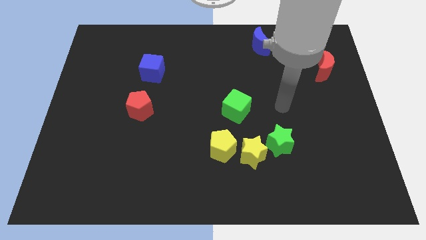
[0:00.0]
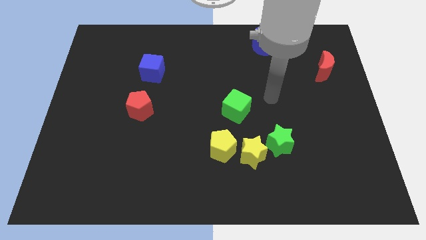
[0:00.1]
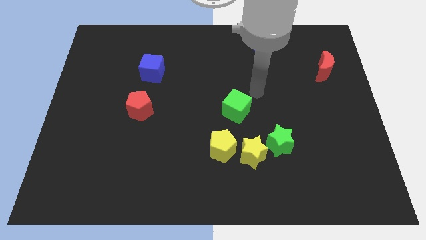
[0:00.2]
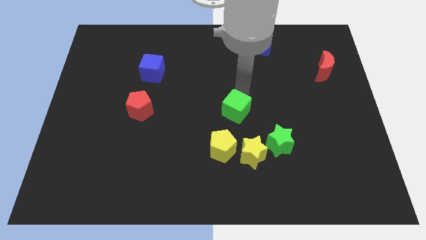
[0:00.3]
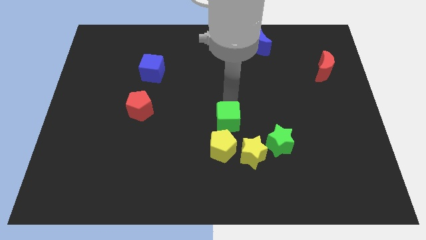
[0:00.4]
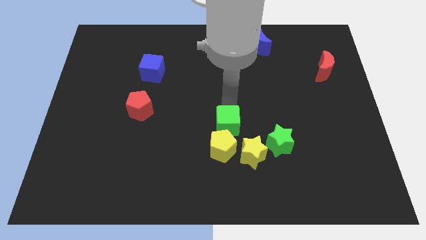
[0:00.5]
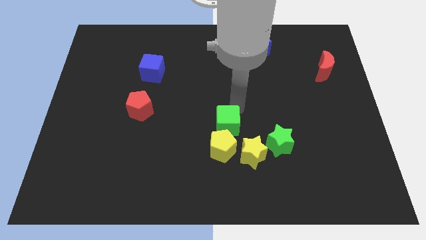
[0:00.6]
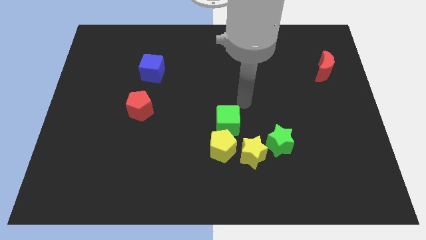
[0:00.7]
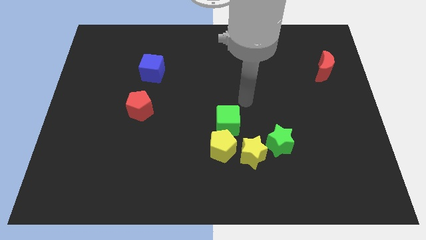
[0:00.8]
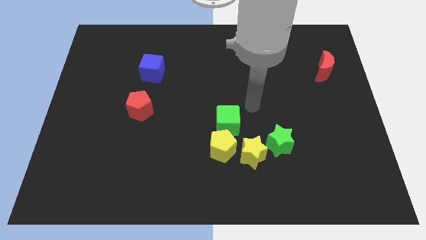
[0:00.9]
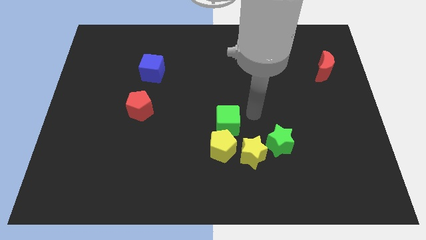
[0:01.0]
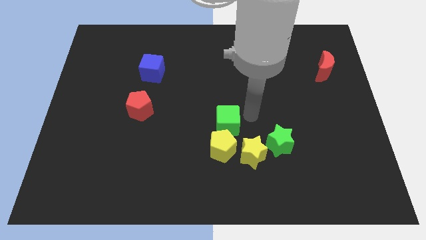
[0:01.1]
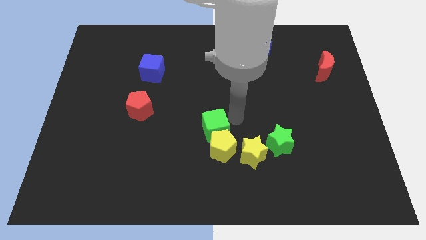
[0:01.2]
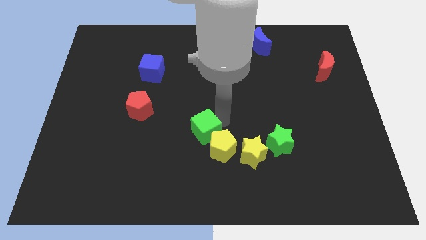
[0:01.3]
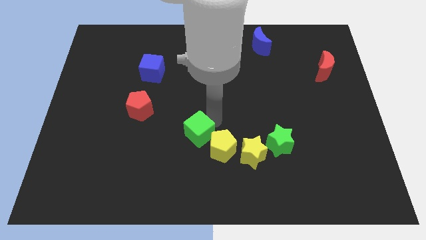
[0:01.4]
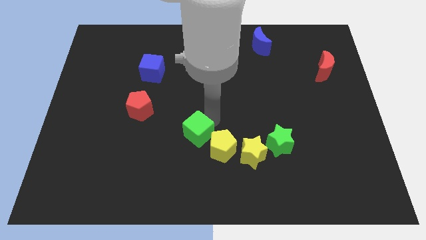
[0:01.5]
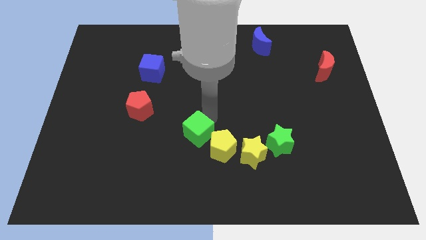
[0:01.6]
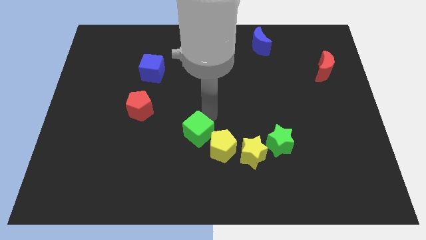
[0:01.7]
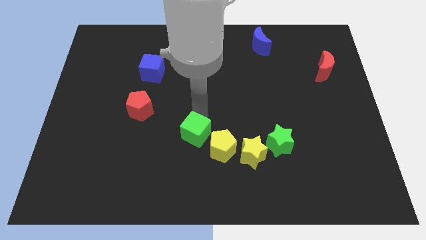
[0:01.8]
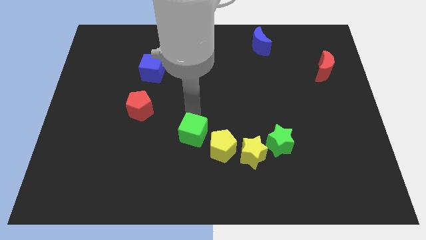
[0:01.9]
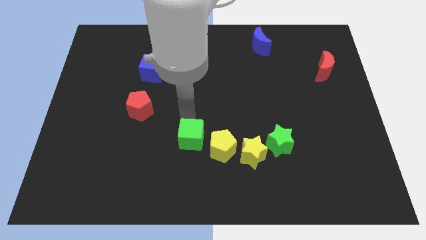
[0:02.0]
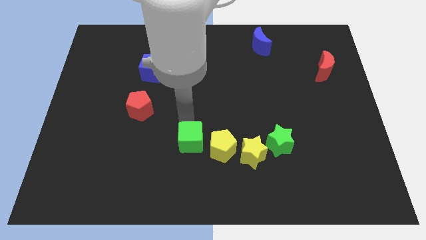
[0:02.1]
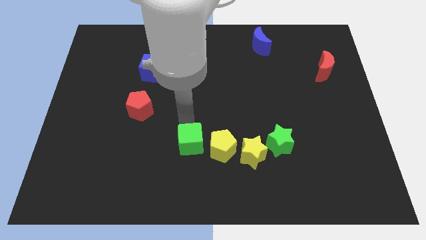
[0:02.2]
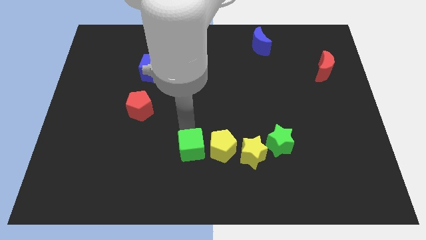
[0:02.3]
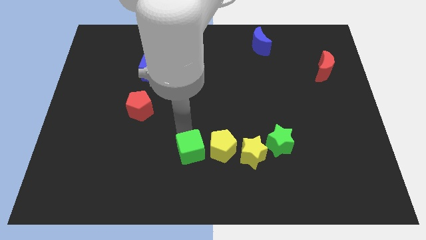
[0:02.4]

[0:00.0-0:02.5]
put the green cube beside the yellow pentagon

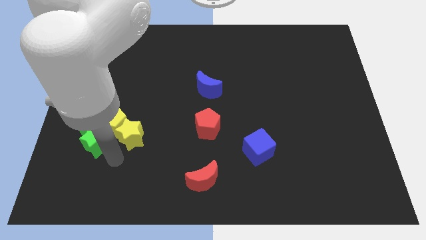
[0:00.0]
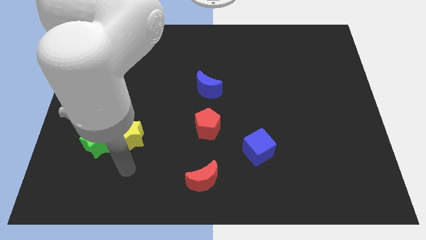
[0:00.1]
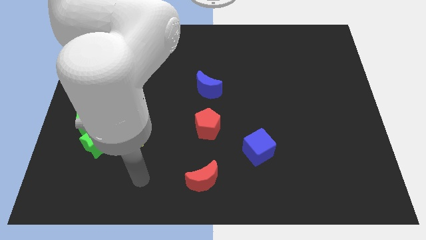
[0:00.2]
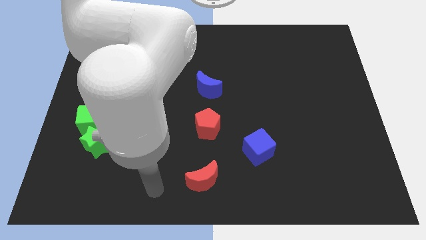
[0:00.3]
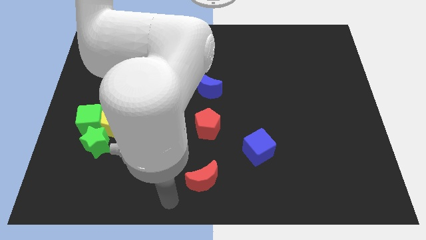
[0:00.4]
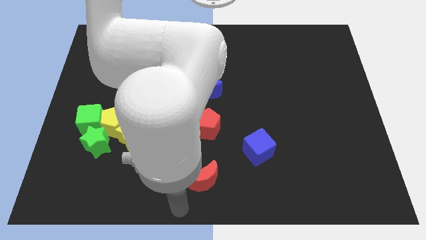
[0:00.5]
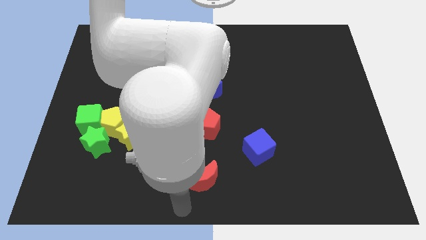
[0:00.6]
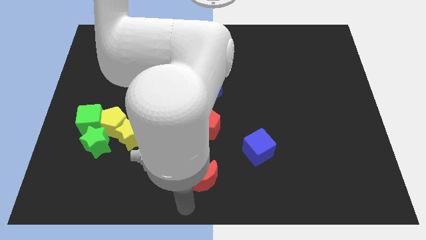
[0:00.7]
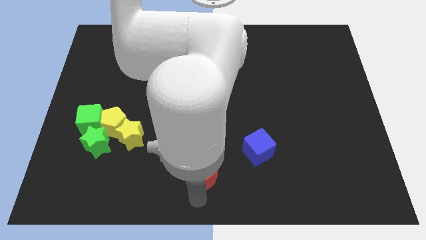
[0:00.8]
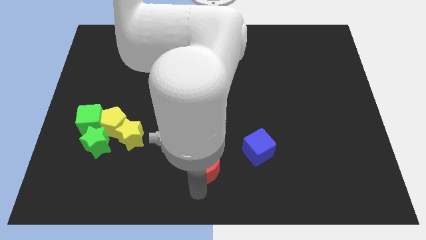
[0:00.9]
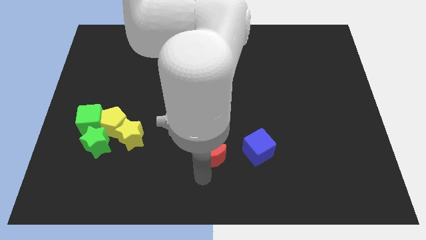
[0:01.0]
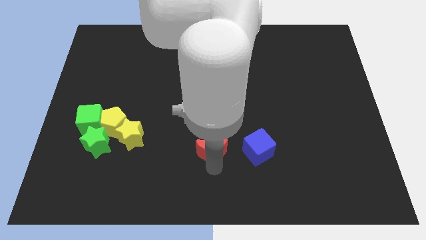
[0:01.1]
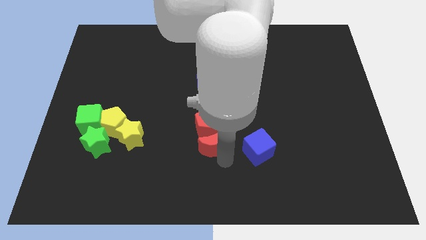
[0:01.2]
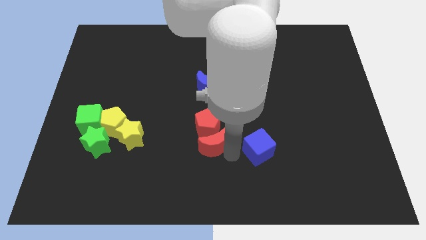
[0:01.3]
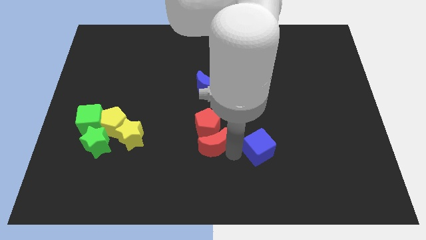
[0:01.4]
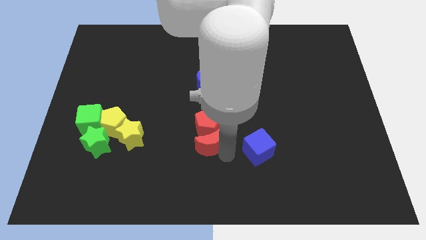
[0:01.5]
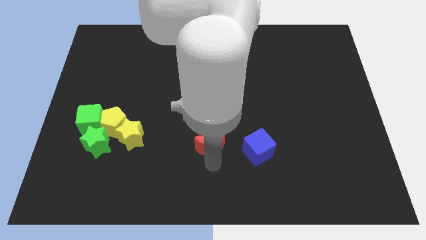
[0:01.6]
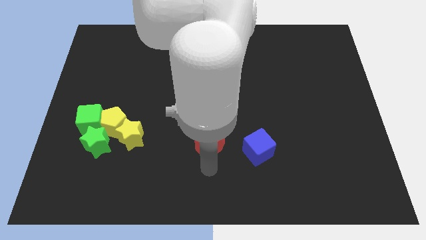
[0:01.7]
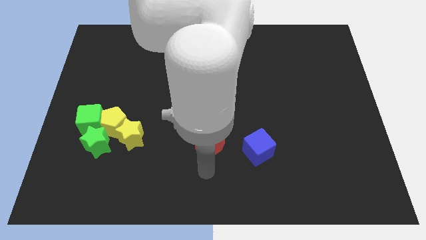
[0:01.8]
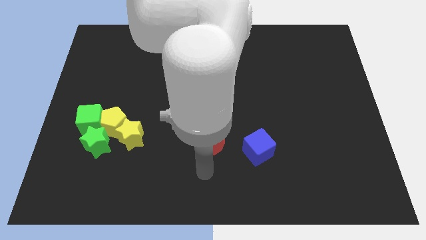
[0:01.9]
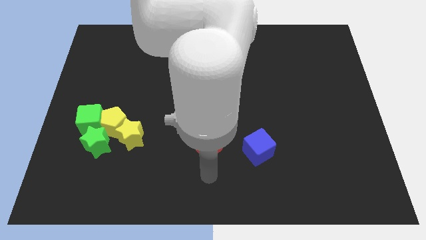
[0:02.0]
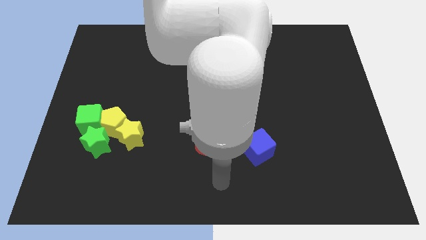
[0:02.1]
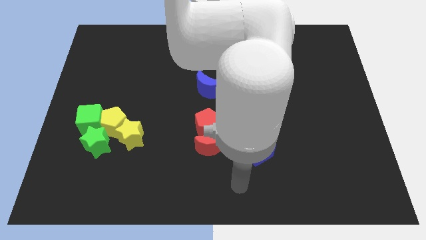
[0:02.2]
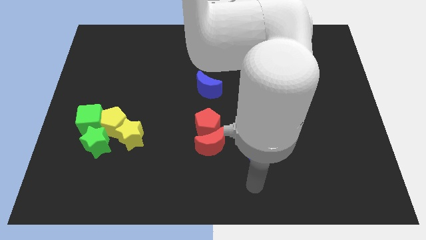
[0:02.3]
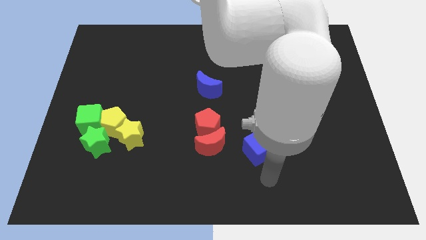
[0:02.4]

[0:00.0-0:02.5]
place the red moon close to the red pentagon

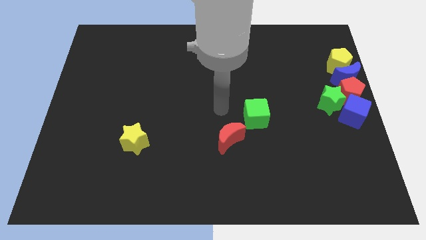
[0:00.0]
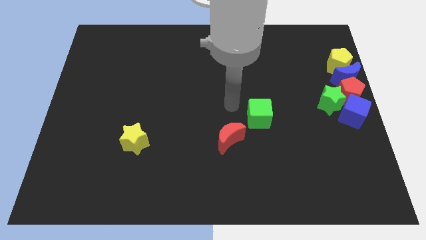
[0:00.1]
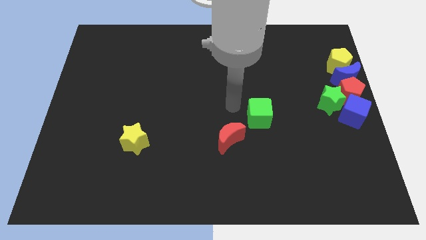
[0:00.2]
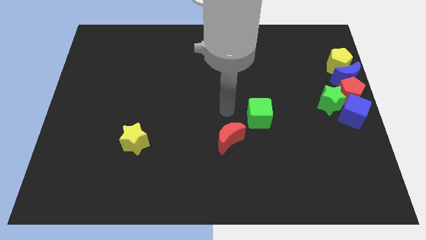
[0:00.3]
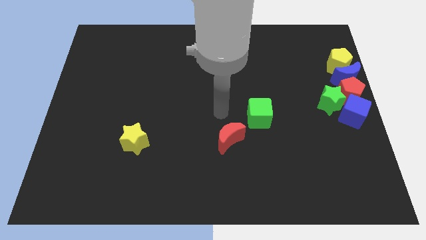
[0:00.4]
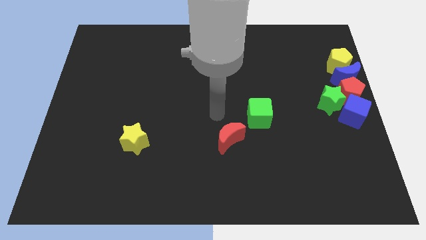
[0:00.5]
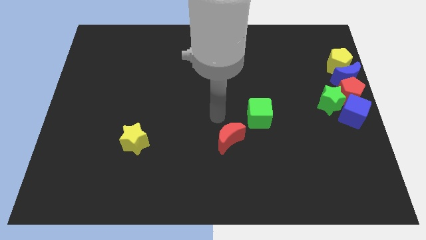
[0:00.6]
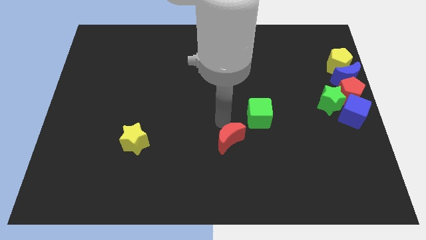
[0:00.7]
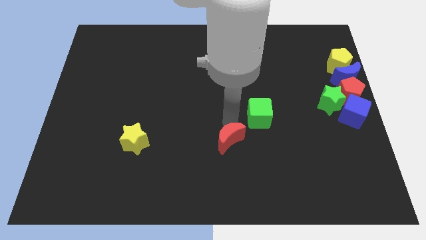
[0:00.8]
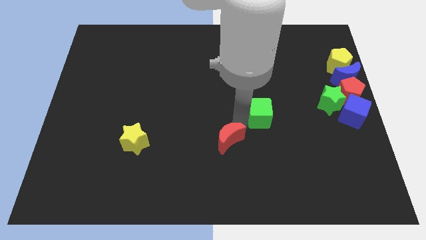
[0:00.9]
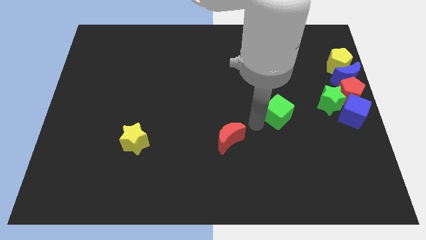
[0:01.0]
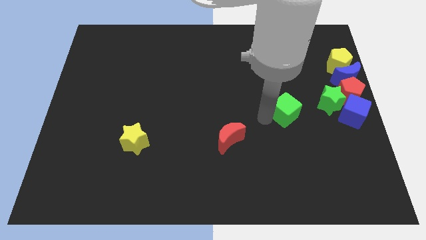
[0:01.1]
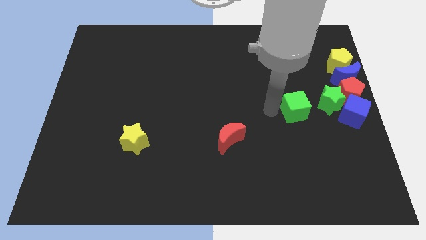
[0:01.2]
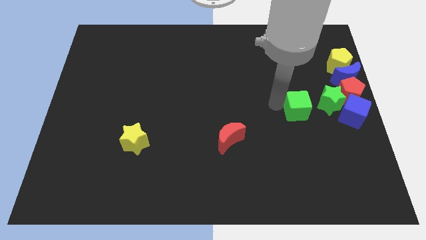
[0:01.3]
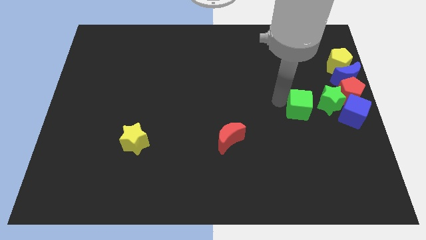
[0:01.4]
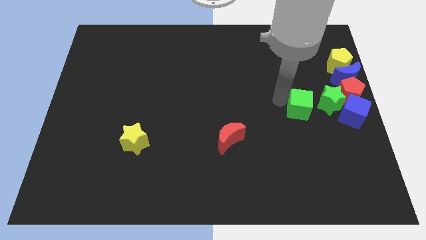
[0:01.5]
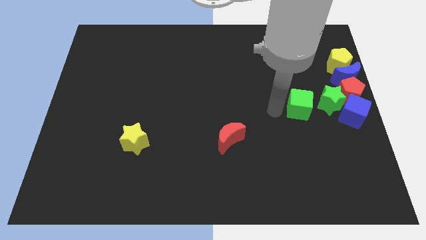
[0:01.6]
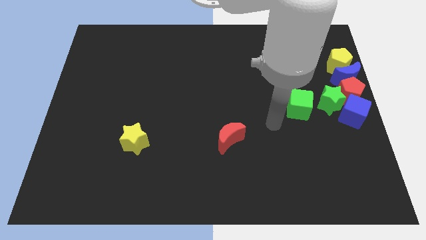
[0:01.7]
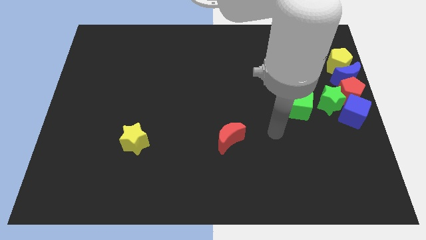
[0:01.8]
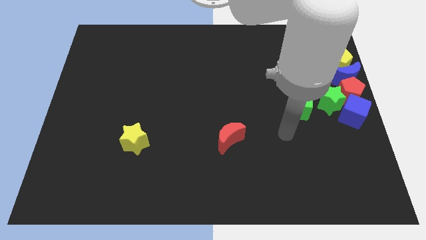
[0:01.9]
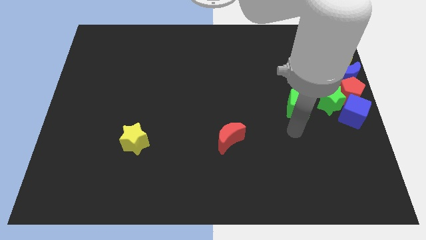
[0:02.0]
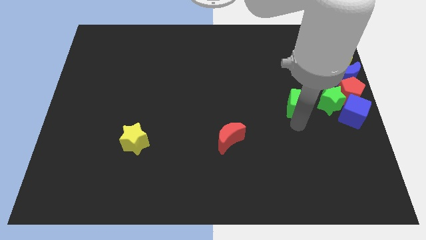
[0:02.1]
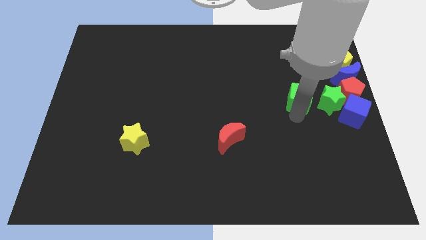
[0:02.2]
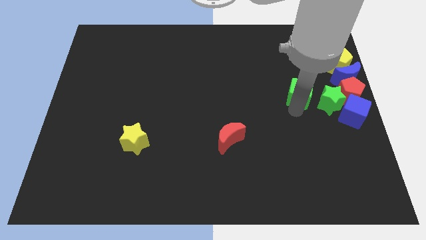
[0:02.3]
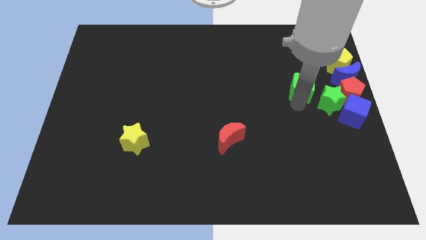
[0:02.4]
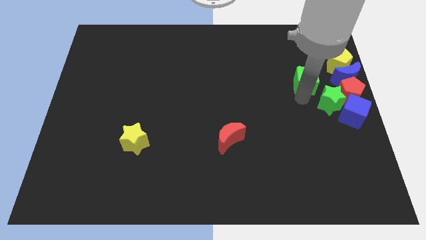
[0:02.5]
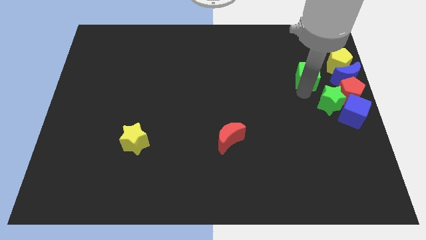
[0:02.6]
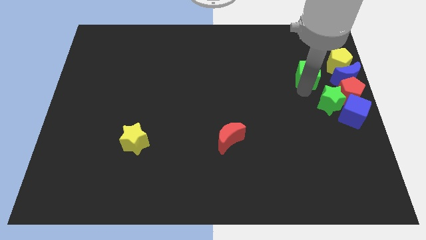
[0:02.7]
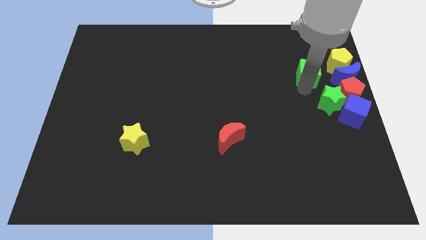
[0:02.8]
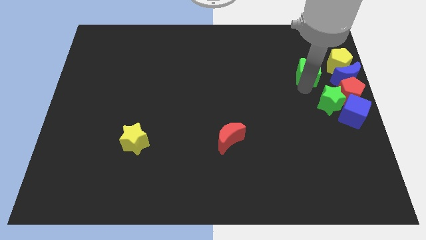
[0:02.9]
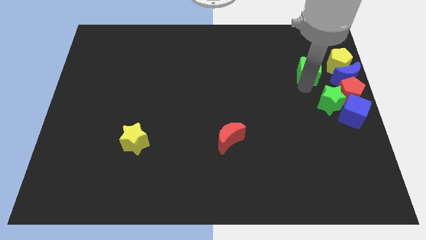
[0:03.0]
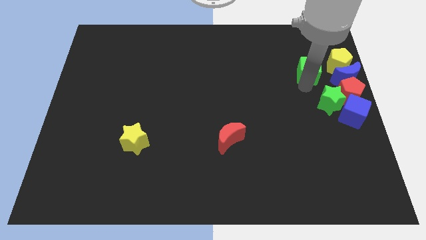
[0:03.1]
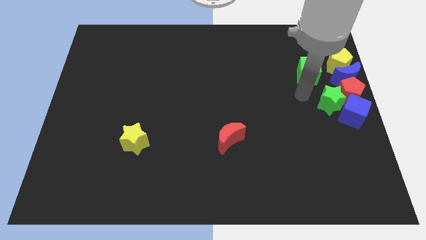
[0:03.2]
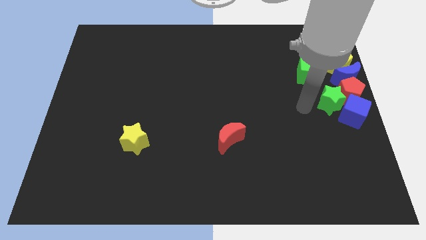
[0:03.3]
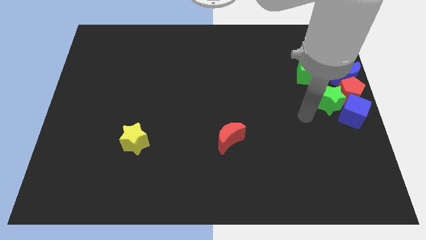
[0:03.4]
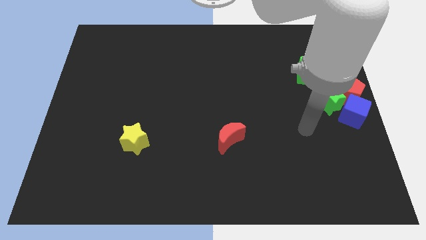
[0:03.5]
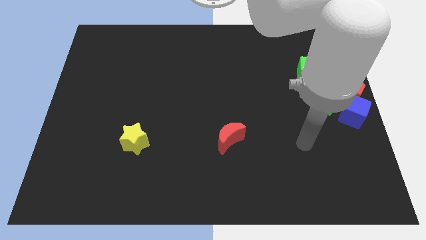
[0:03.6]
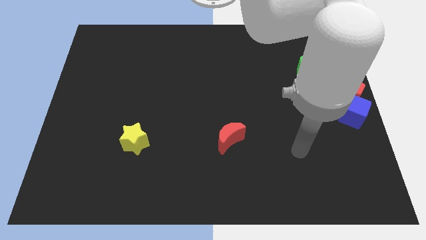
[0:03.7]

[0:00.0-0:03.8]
move the green cube towards yellow pentagon

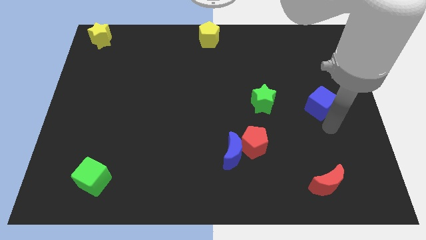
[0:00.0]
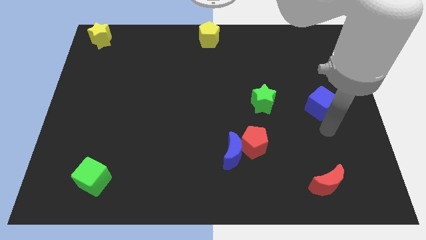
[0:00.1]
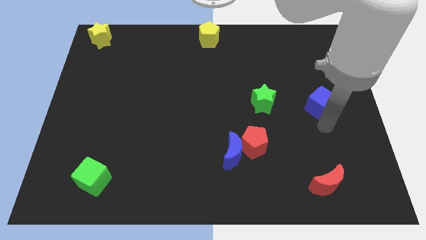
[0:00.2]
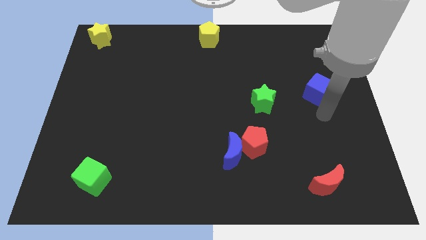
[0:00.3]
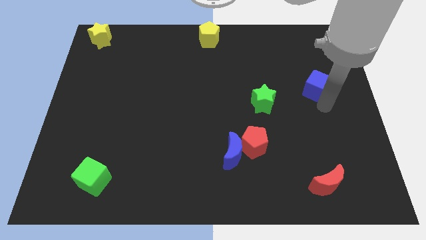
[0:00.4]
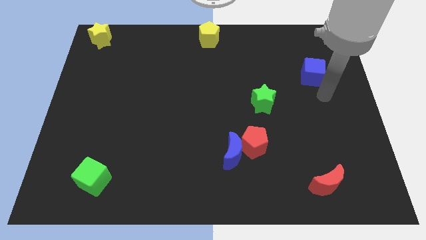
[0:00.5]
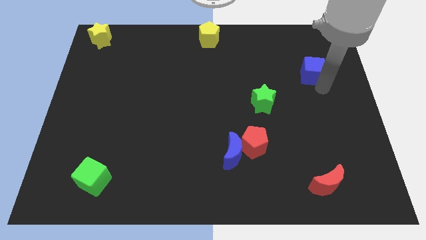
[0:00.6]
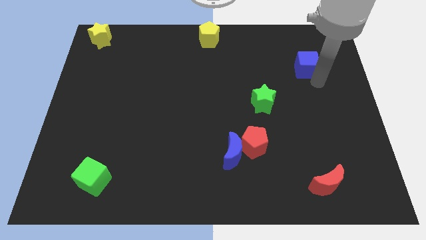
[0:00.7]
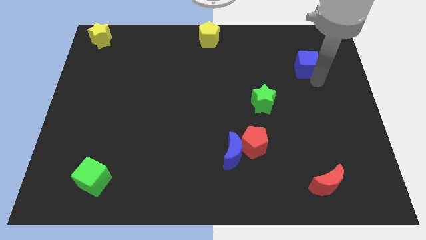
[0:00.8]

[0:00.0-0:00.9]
place the blue cube diagonal to the green star
